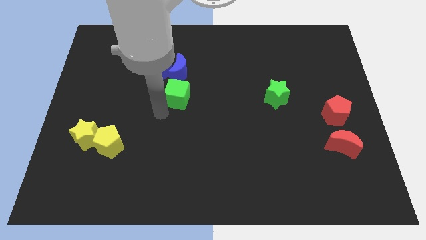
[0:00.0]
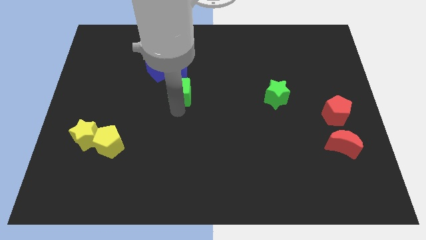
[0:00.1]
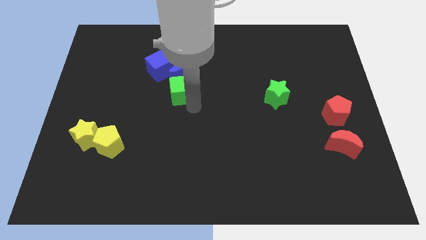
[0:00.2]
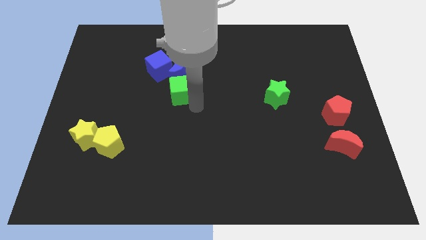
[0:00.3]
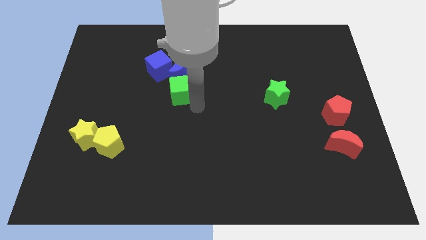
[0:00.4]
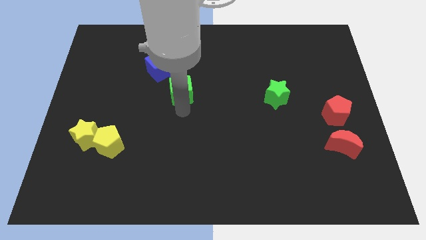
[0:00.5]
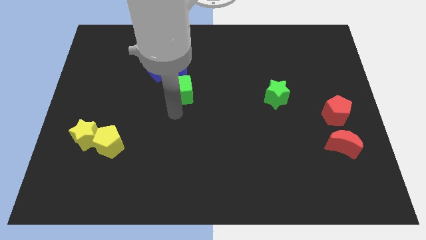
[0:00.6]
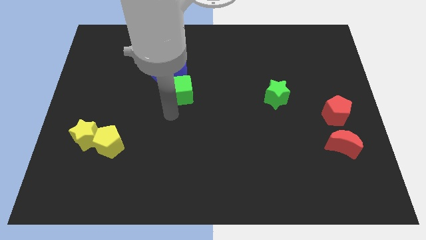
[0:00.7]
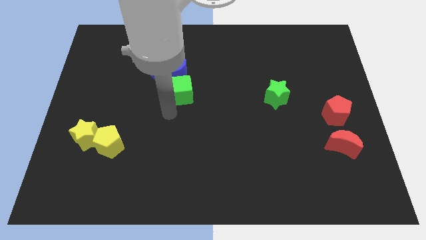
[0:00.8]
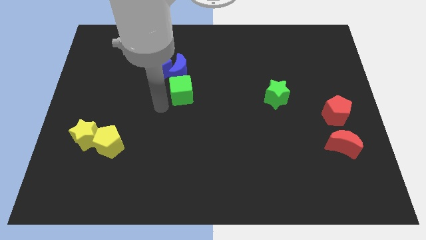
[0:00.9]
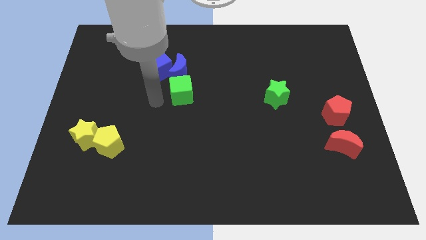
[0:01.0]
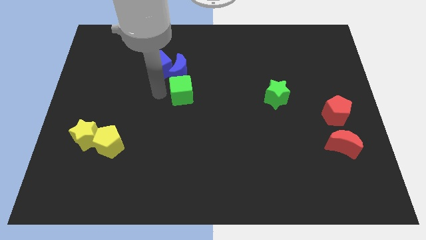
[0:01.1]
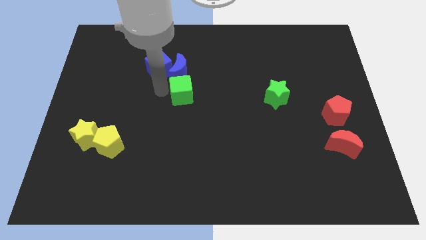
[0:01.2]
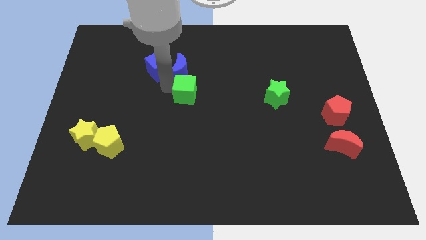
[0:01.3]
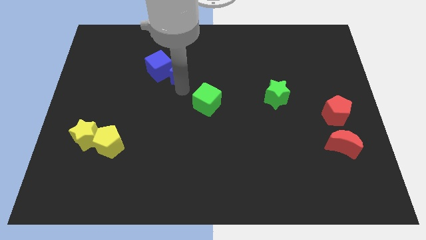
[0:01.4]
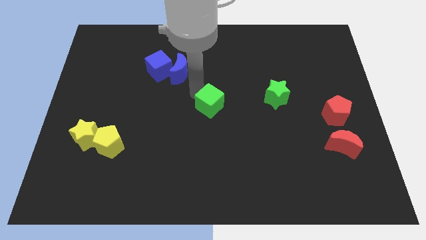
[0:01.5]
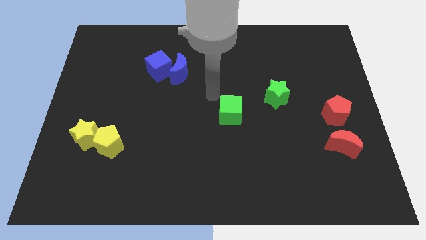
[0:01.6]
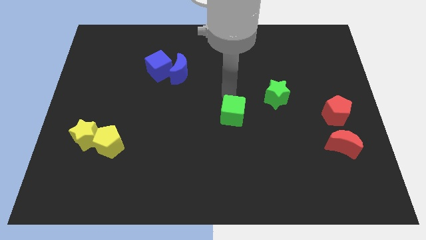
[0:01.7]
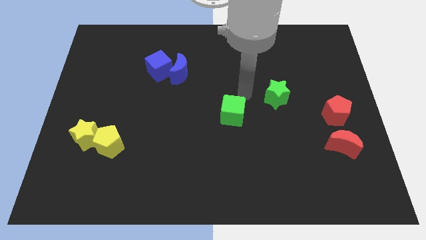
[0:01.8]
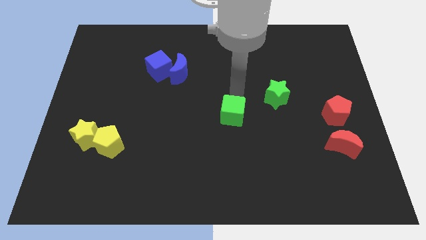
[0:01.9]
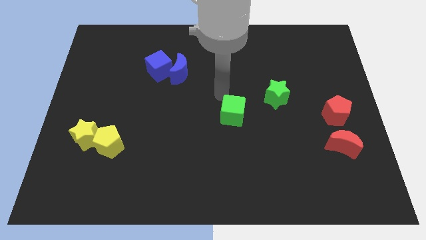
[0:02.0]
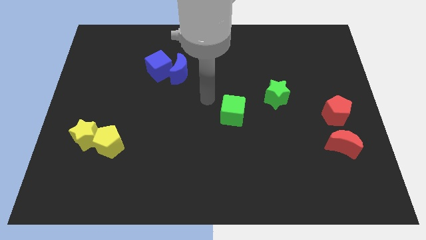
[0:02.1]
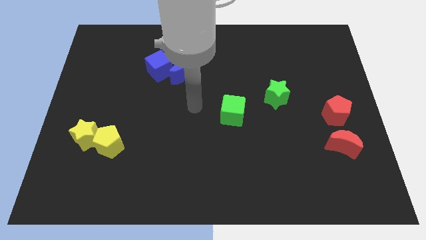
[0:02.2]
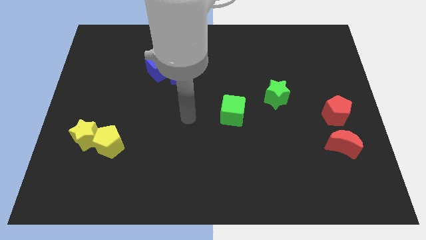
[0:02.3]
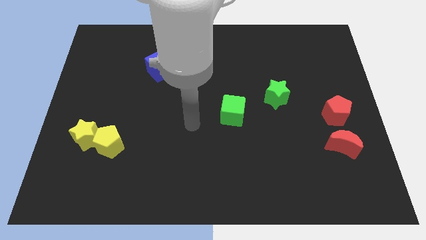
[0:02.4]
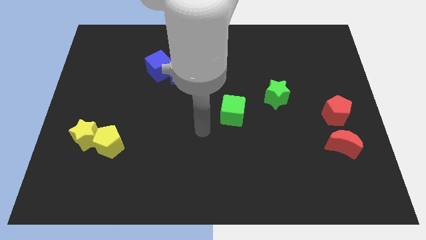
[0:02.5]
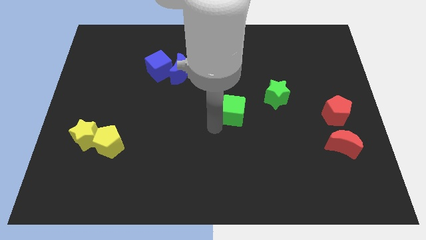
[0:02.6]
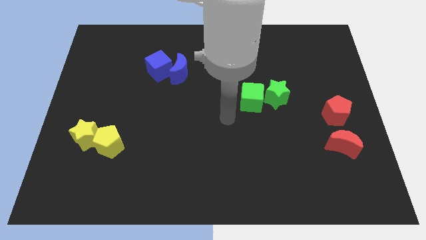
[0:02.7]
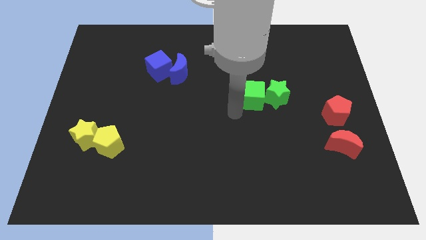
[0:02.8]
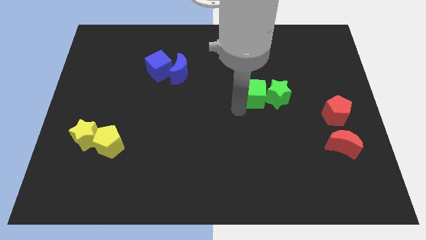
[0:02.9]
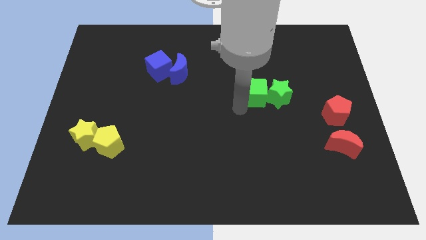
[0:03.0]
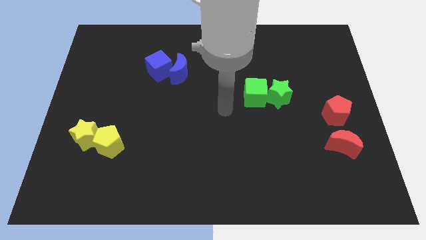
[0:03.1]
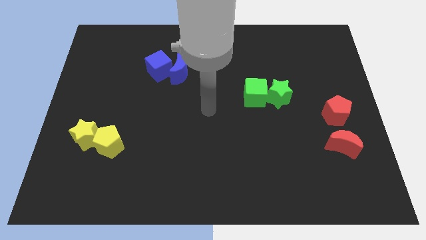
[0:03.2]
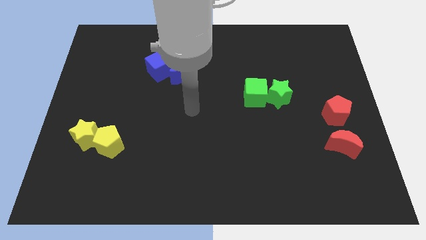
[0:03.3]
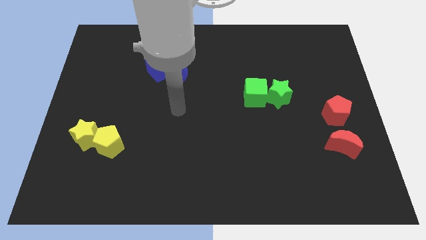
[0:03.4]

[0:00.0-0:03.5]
place the green cube left to the green star

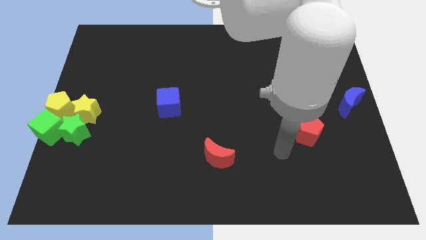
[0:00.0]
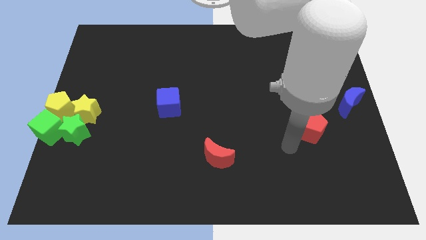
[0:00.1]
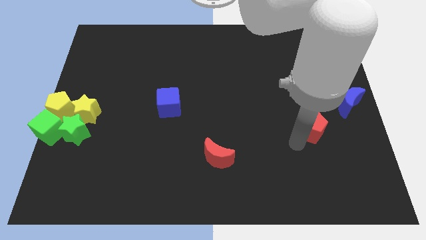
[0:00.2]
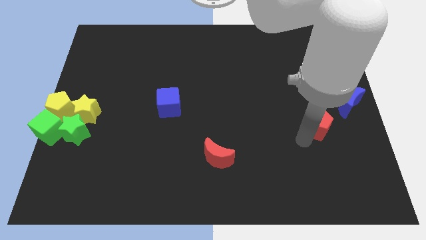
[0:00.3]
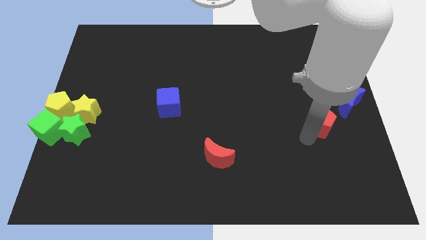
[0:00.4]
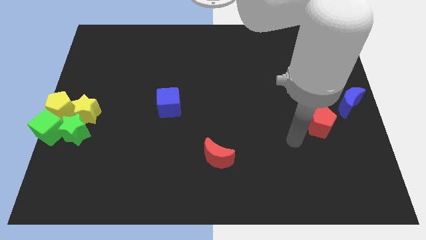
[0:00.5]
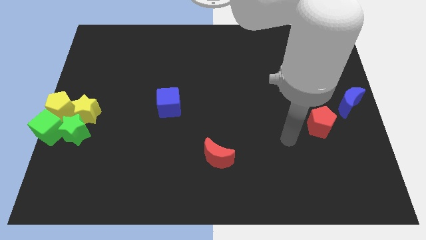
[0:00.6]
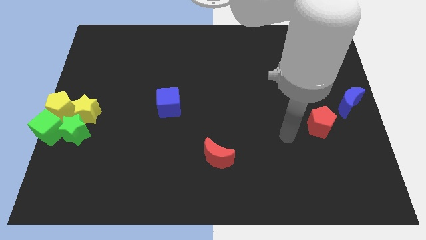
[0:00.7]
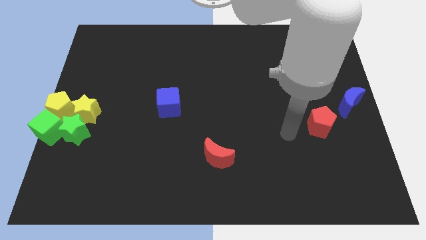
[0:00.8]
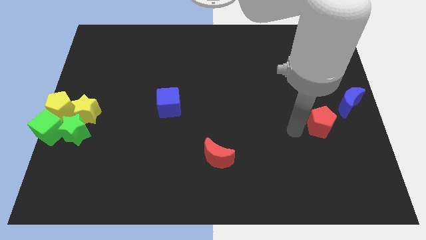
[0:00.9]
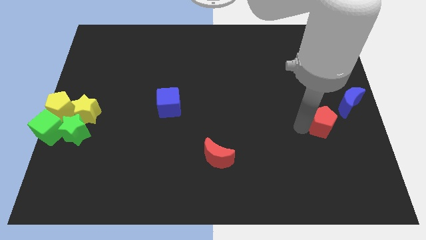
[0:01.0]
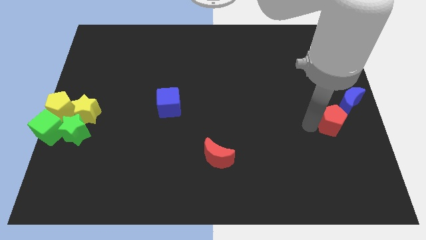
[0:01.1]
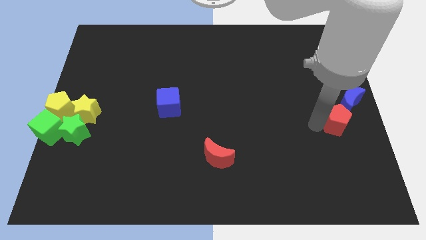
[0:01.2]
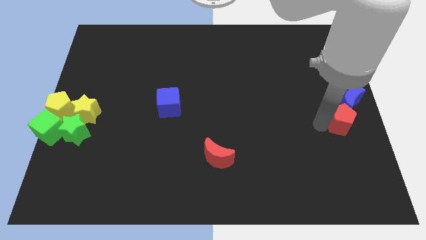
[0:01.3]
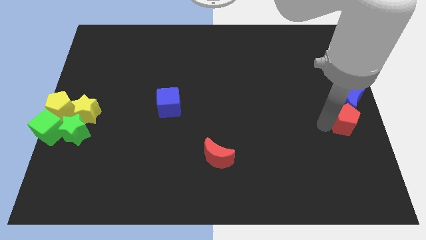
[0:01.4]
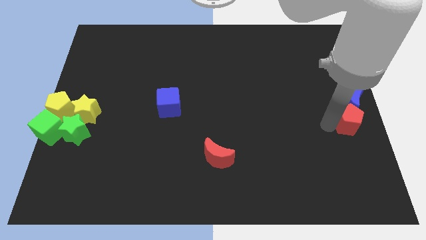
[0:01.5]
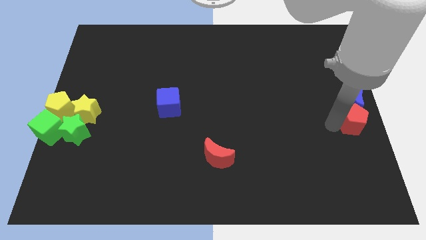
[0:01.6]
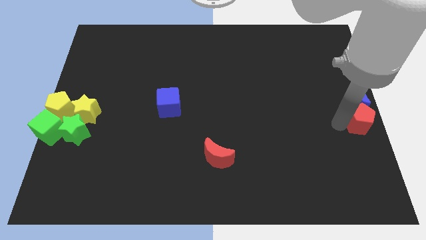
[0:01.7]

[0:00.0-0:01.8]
place the red pentagon along with the blue crescent to the center right of the board

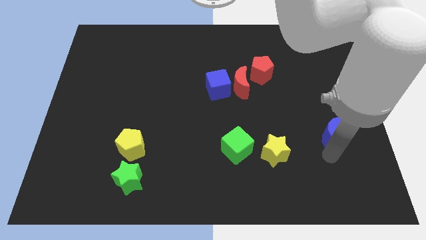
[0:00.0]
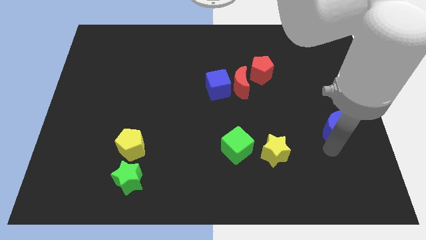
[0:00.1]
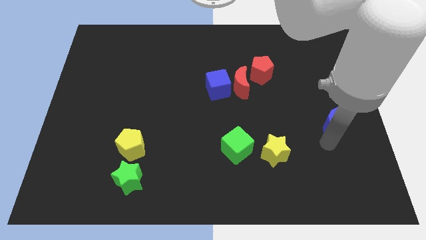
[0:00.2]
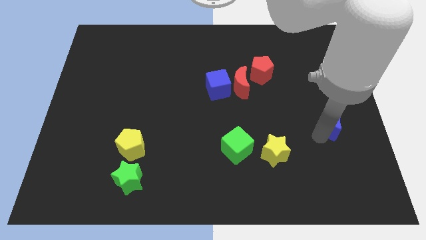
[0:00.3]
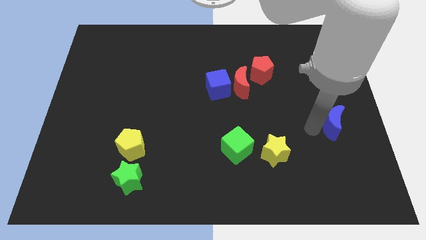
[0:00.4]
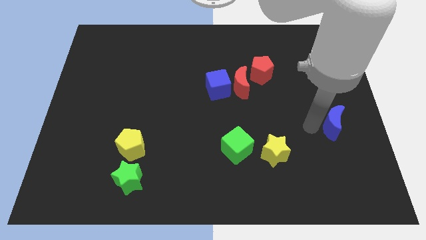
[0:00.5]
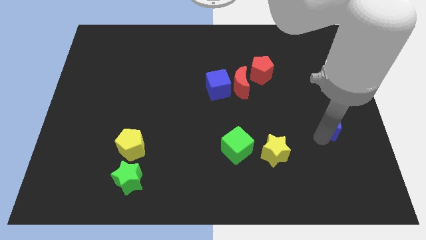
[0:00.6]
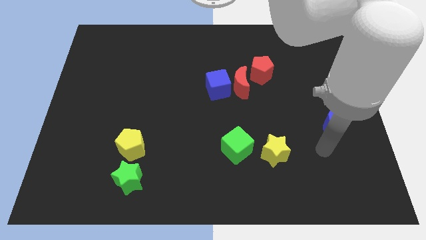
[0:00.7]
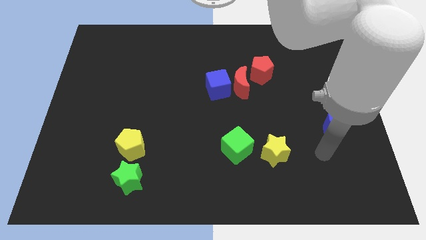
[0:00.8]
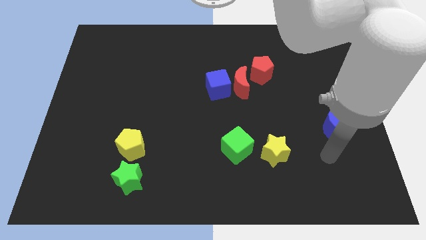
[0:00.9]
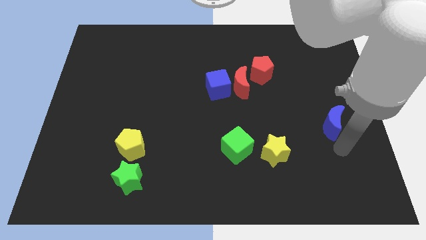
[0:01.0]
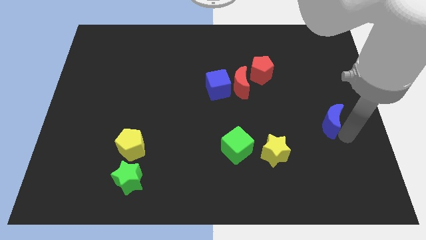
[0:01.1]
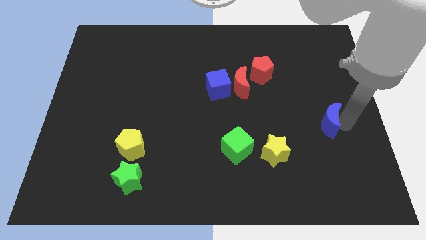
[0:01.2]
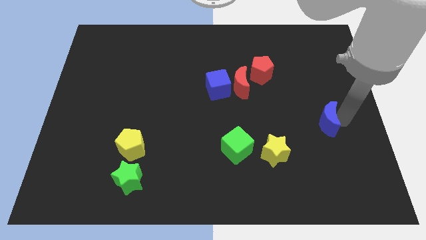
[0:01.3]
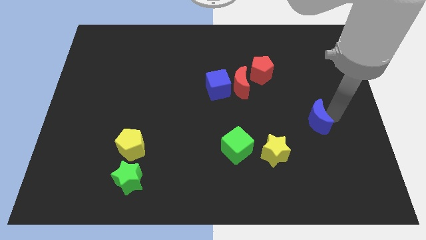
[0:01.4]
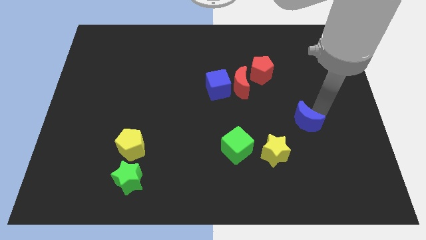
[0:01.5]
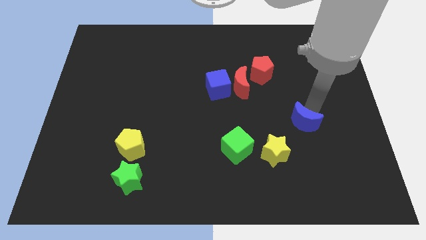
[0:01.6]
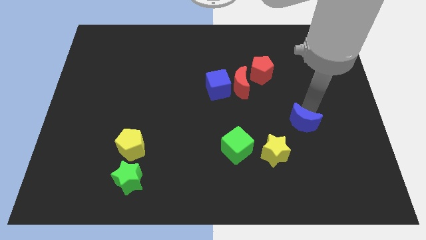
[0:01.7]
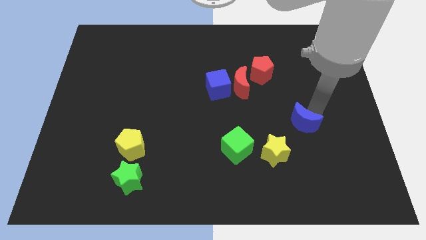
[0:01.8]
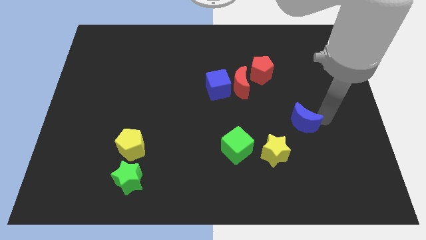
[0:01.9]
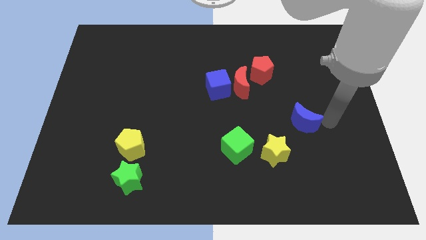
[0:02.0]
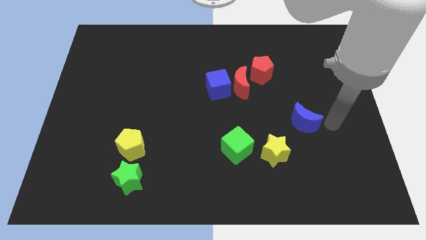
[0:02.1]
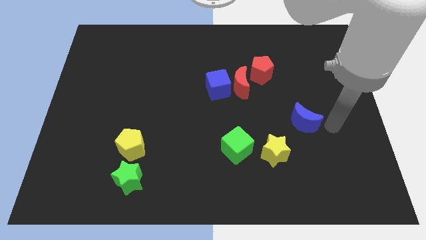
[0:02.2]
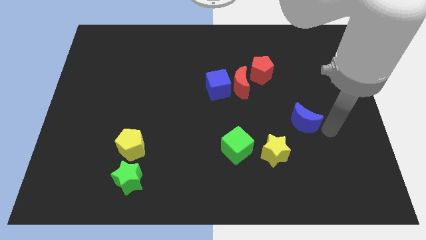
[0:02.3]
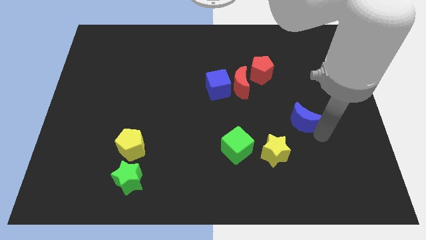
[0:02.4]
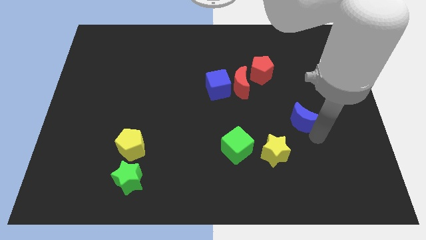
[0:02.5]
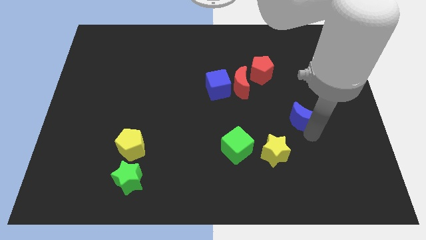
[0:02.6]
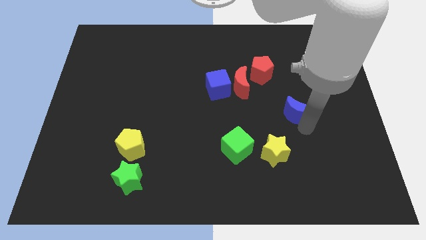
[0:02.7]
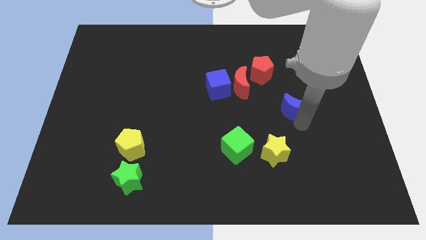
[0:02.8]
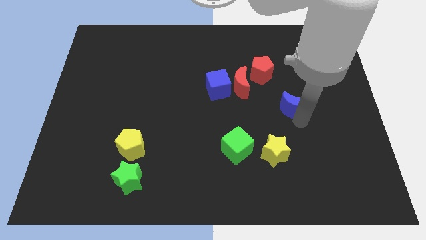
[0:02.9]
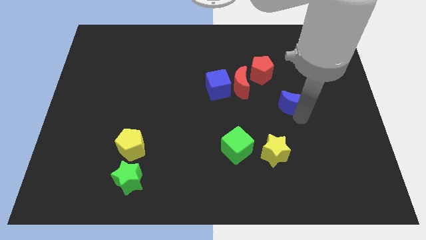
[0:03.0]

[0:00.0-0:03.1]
push blue crescent below red pentagon

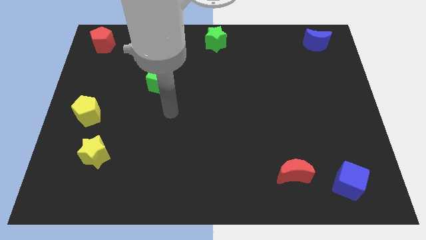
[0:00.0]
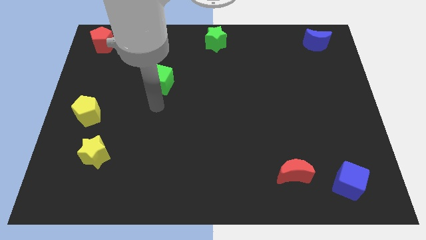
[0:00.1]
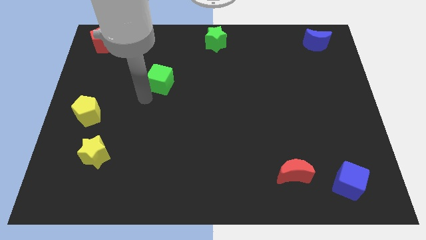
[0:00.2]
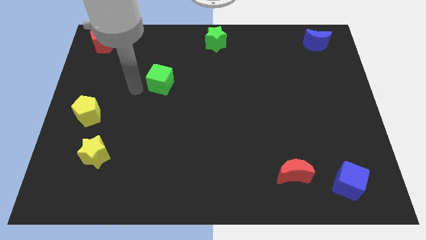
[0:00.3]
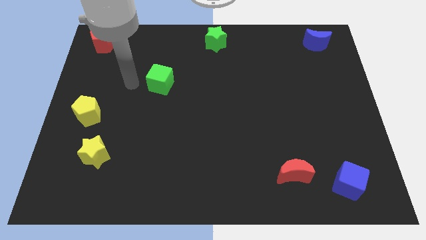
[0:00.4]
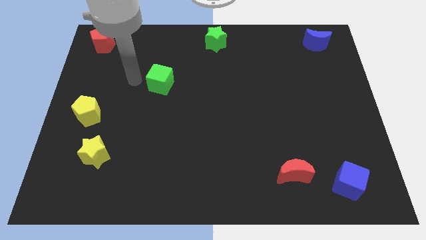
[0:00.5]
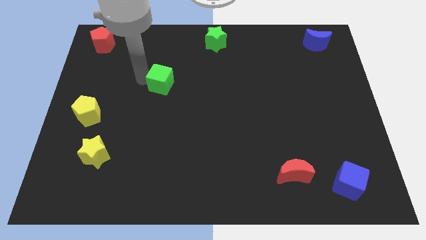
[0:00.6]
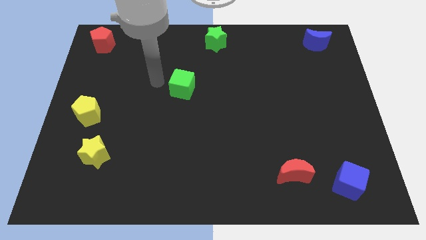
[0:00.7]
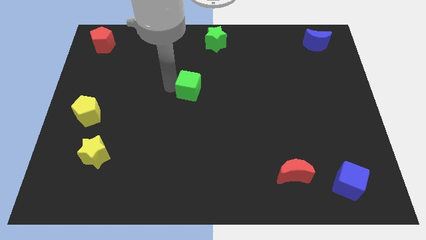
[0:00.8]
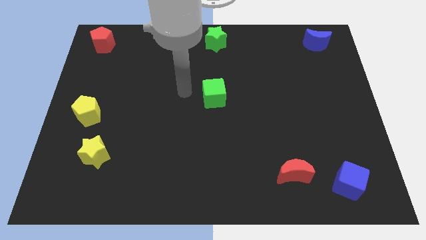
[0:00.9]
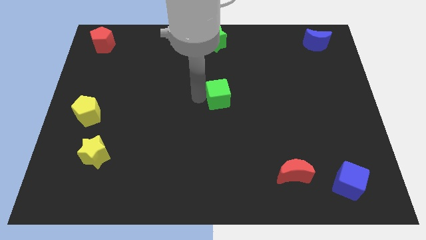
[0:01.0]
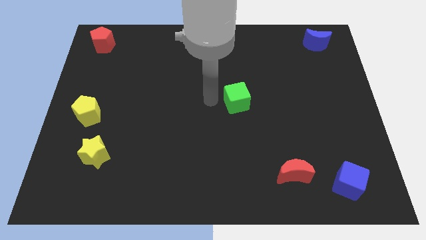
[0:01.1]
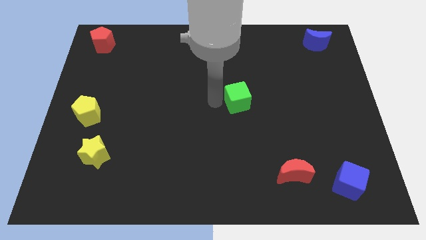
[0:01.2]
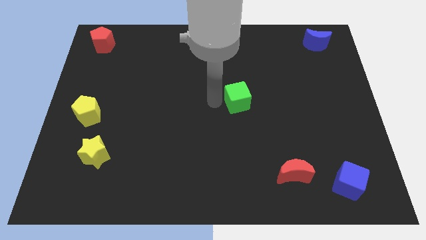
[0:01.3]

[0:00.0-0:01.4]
move the green cube at the center of the board
